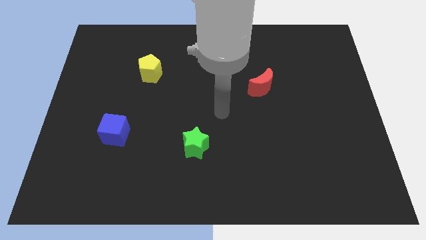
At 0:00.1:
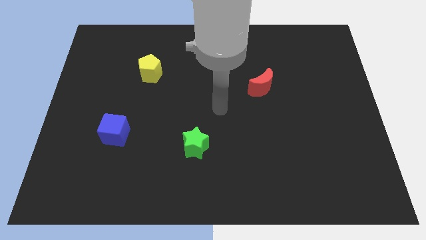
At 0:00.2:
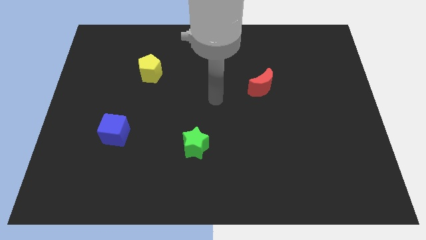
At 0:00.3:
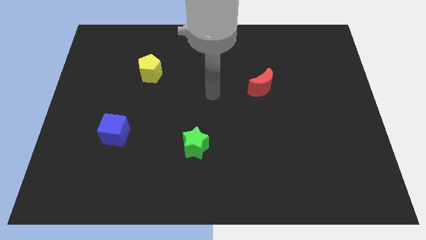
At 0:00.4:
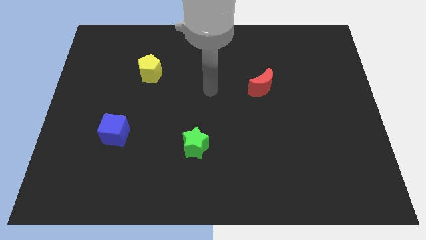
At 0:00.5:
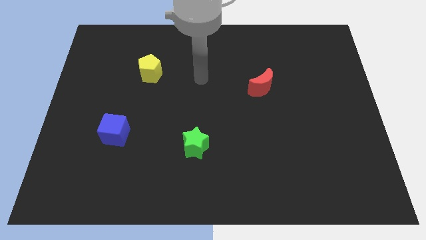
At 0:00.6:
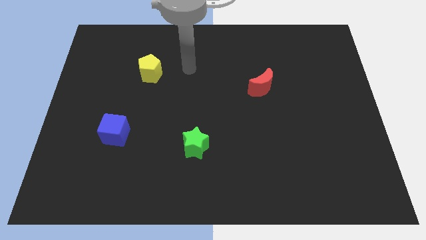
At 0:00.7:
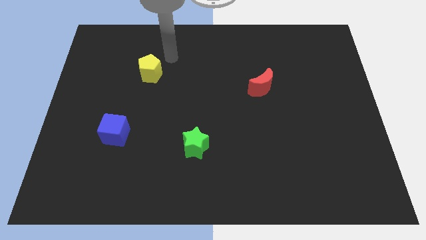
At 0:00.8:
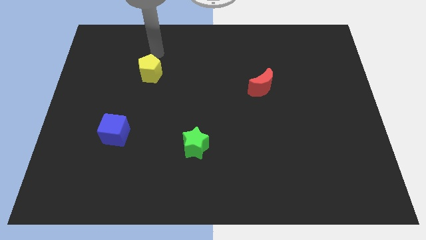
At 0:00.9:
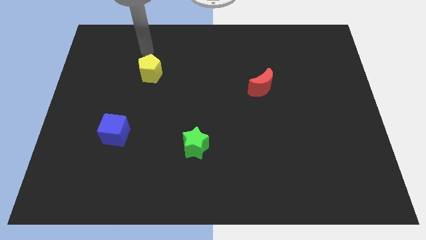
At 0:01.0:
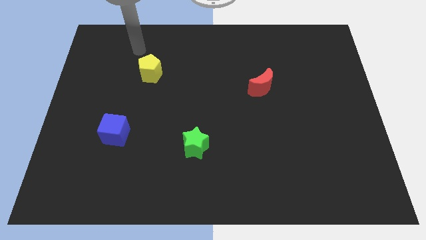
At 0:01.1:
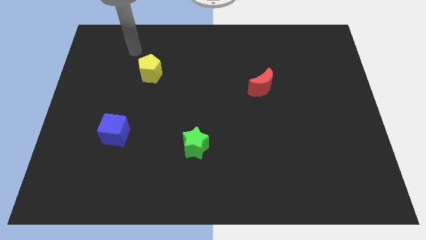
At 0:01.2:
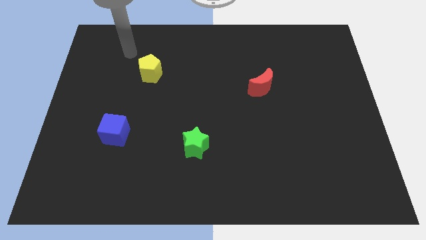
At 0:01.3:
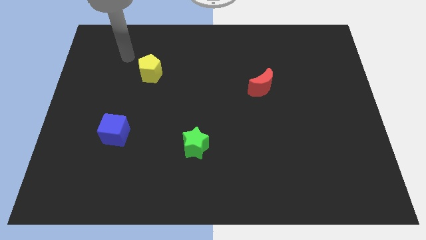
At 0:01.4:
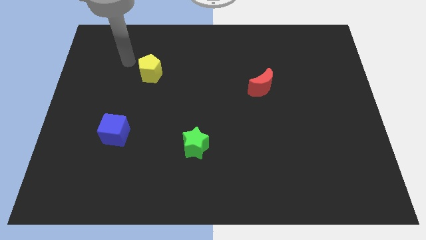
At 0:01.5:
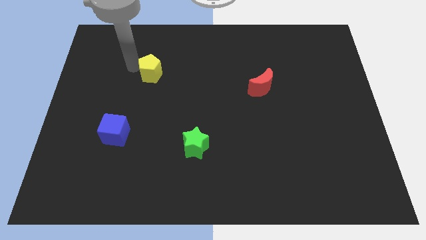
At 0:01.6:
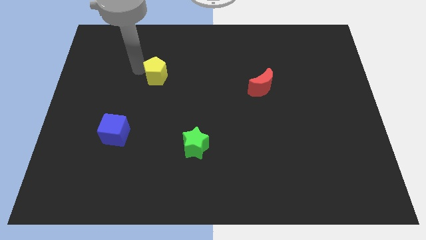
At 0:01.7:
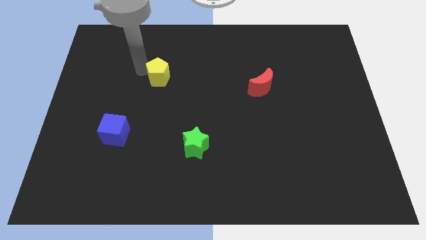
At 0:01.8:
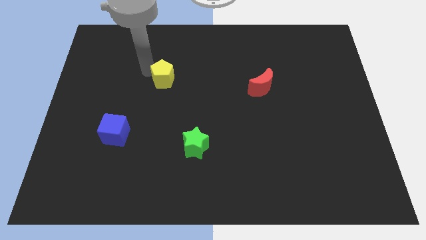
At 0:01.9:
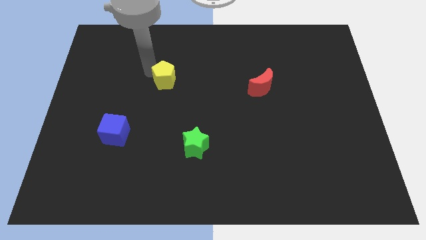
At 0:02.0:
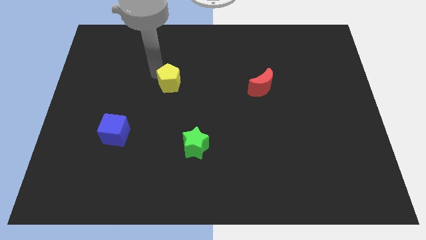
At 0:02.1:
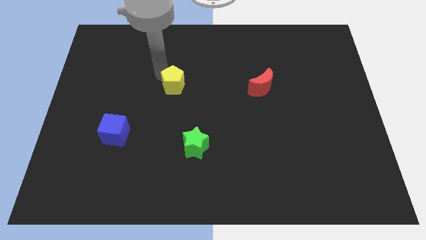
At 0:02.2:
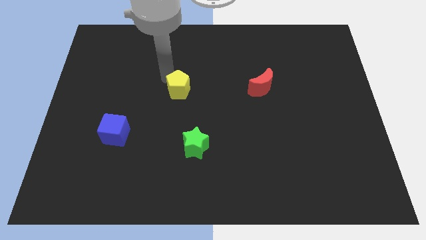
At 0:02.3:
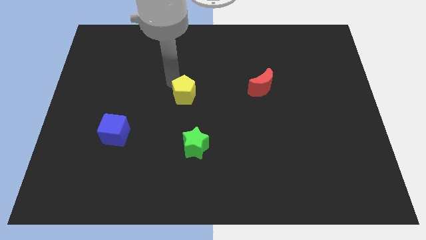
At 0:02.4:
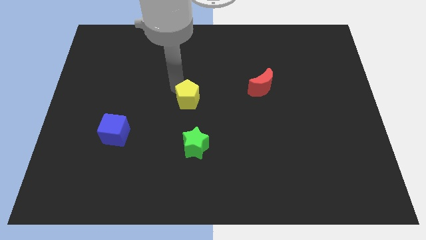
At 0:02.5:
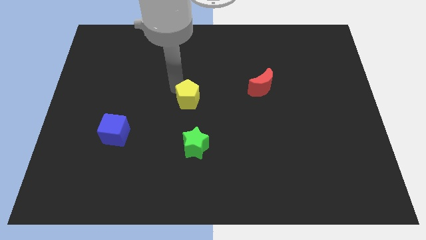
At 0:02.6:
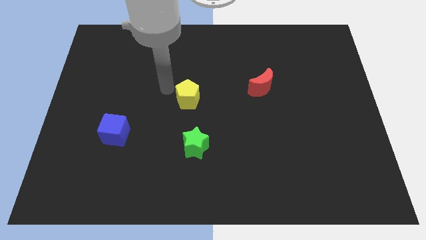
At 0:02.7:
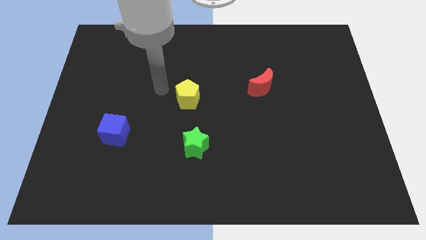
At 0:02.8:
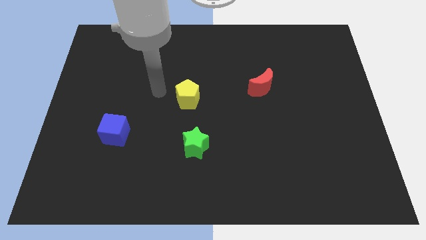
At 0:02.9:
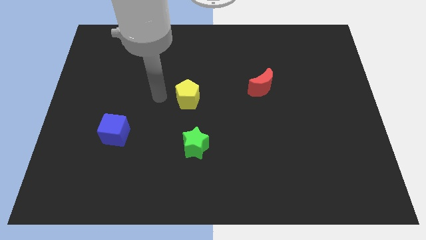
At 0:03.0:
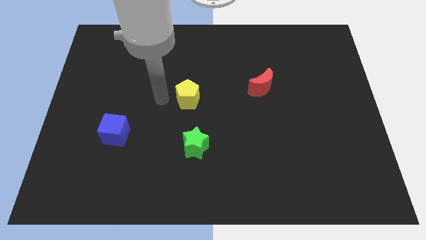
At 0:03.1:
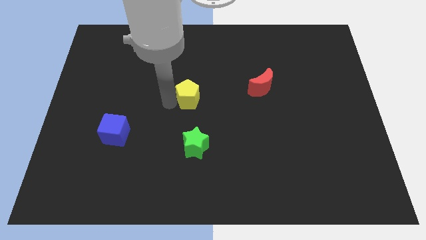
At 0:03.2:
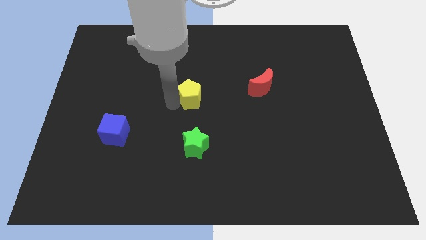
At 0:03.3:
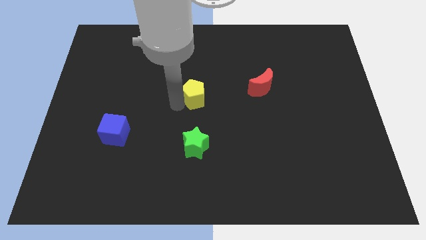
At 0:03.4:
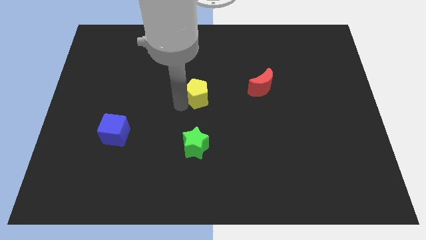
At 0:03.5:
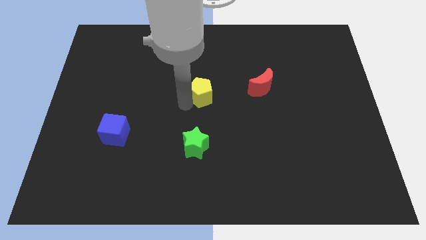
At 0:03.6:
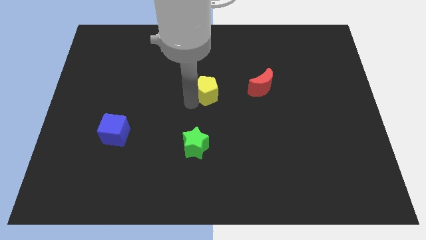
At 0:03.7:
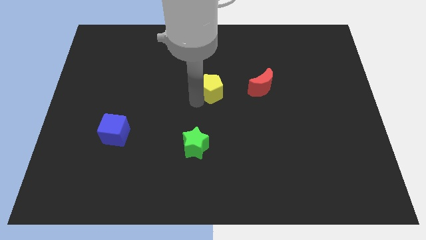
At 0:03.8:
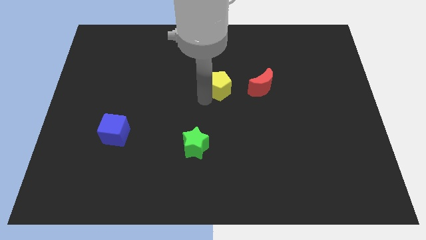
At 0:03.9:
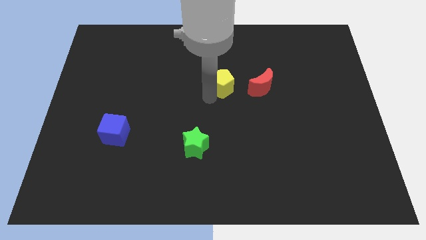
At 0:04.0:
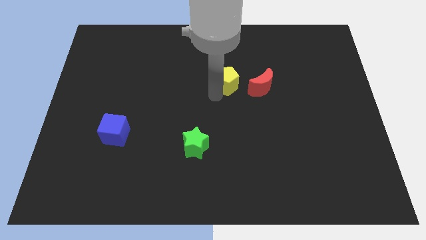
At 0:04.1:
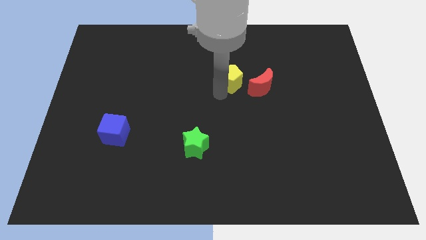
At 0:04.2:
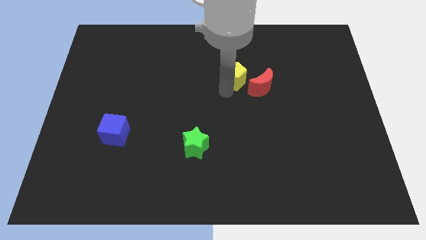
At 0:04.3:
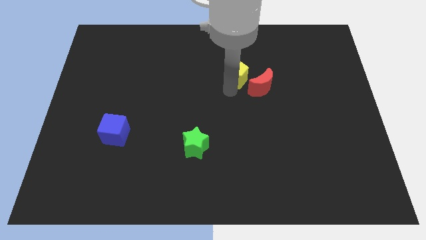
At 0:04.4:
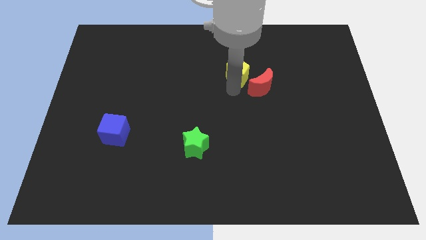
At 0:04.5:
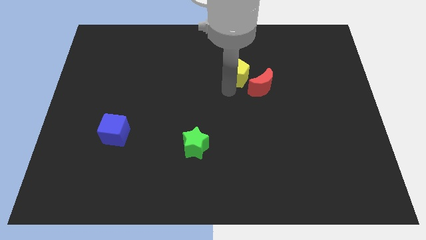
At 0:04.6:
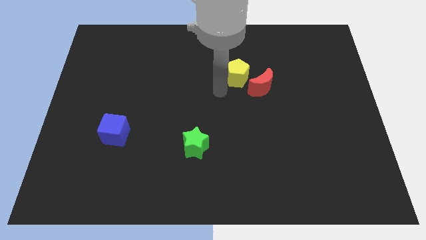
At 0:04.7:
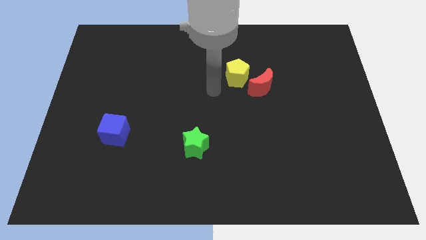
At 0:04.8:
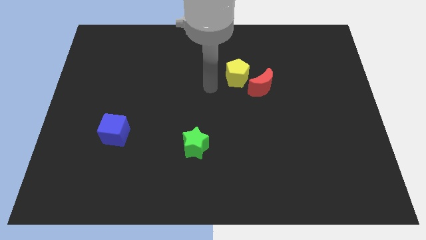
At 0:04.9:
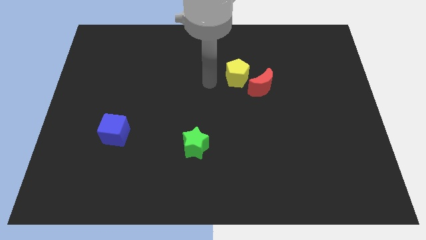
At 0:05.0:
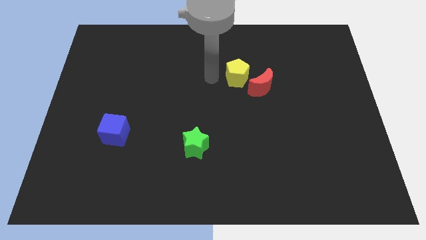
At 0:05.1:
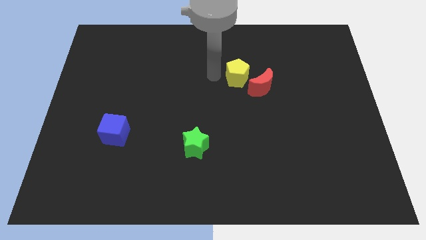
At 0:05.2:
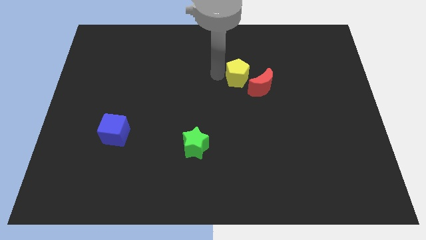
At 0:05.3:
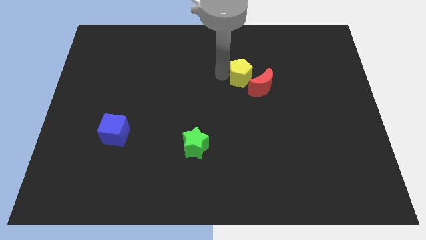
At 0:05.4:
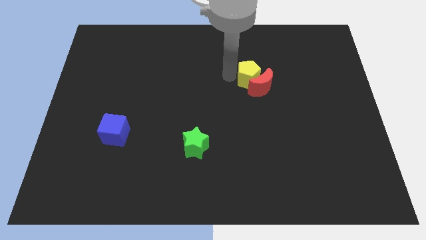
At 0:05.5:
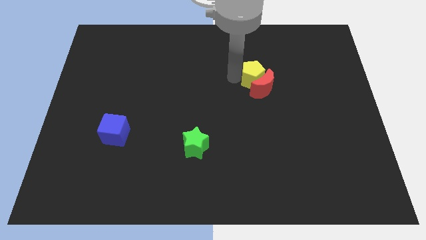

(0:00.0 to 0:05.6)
slide the pentagon towards the red block

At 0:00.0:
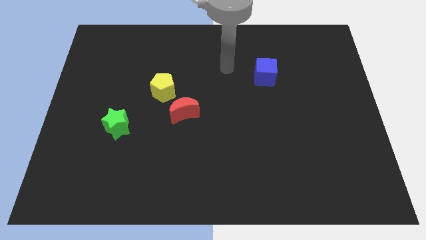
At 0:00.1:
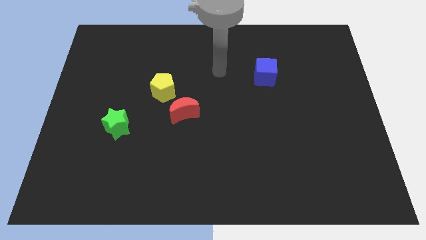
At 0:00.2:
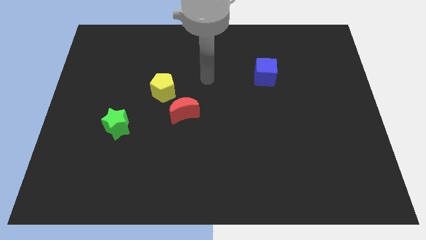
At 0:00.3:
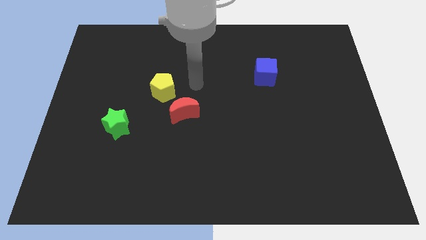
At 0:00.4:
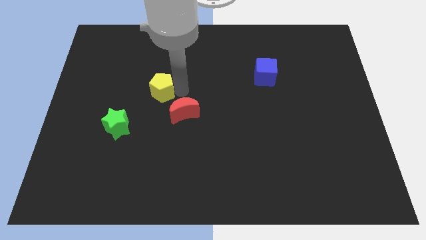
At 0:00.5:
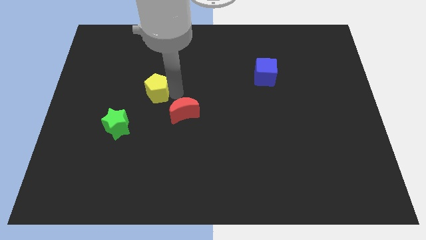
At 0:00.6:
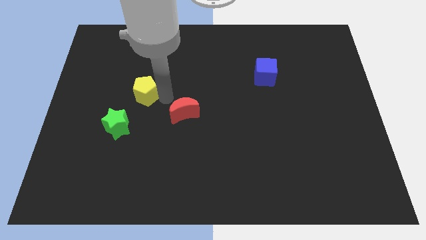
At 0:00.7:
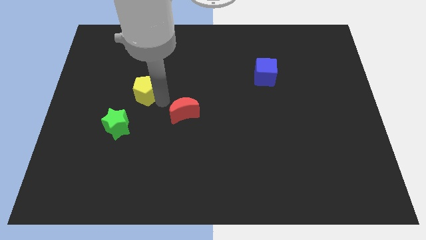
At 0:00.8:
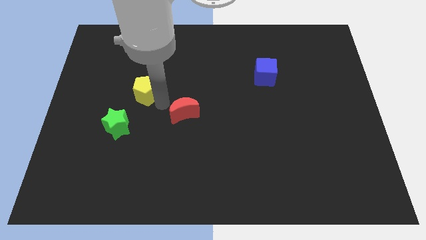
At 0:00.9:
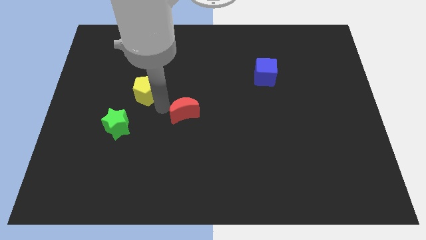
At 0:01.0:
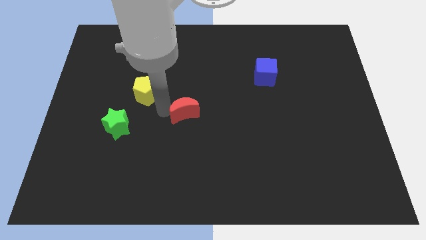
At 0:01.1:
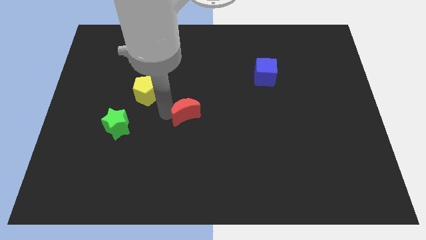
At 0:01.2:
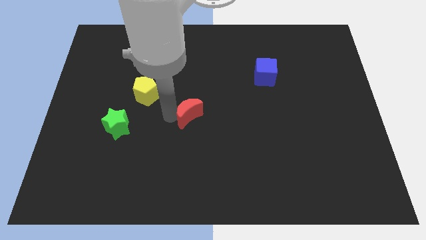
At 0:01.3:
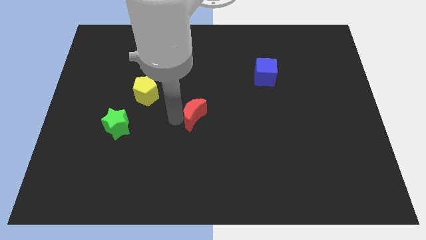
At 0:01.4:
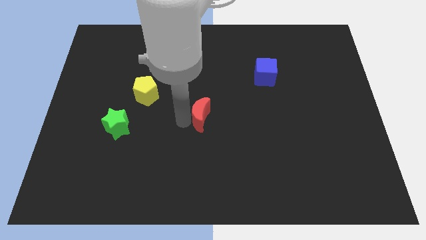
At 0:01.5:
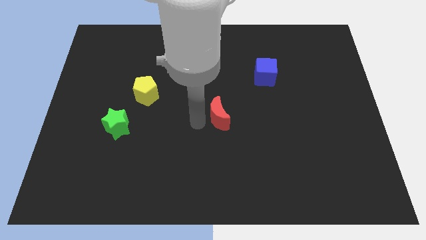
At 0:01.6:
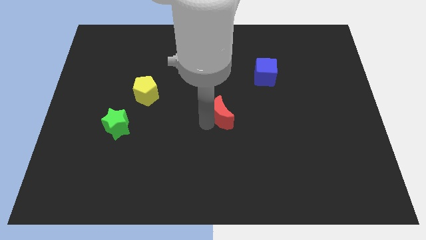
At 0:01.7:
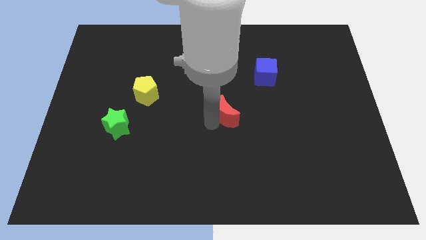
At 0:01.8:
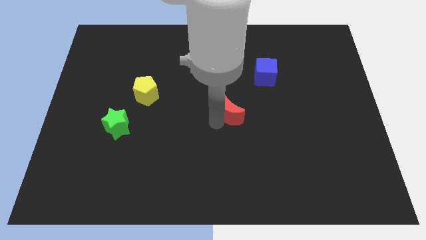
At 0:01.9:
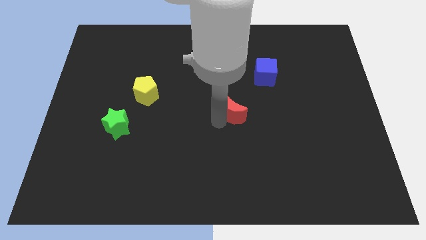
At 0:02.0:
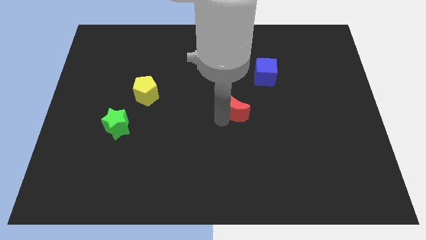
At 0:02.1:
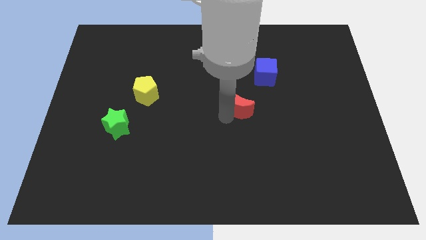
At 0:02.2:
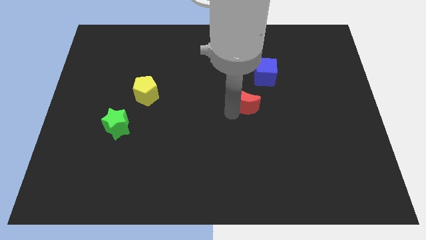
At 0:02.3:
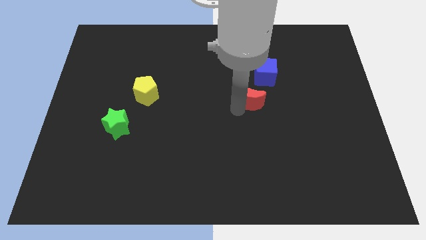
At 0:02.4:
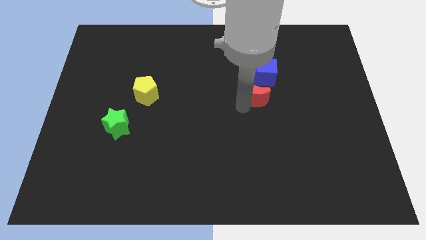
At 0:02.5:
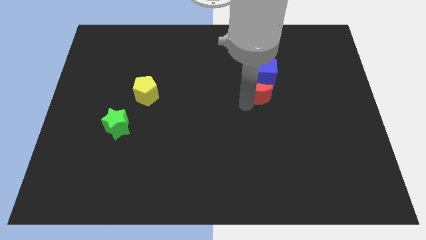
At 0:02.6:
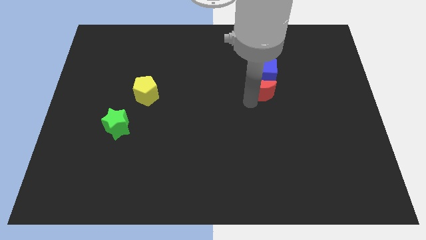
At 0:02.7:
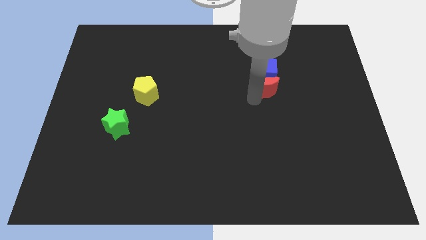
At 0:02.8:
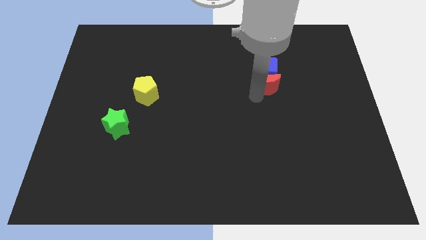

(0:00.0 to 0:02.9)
slide the red moon next to the cube
